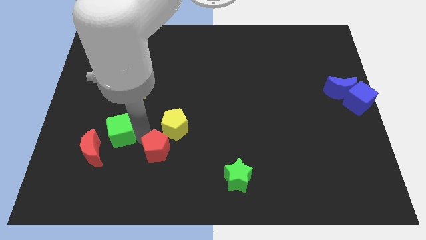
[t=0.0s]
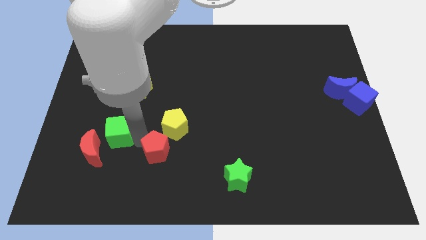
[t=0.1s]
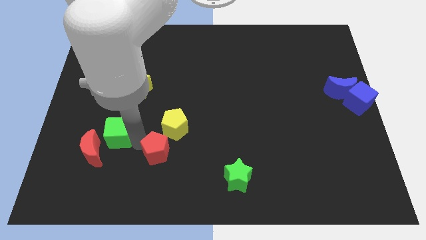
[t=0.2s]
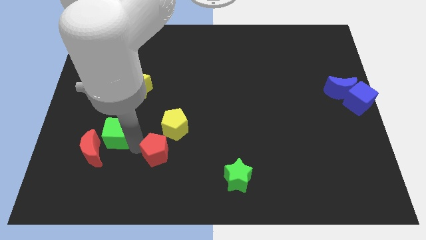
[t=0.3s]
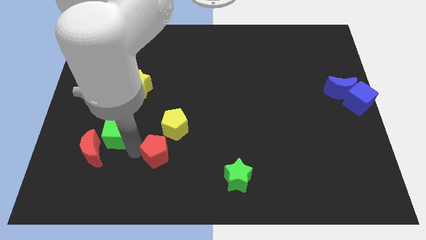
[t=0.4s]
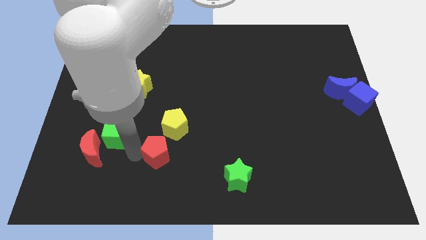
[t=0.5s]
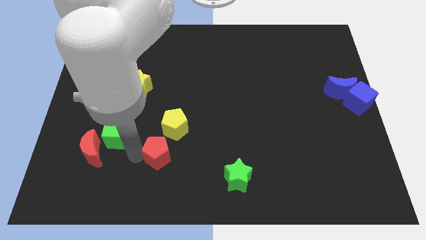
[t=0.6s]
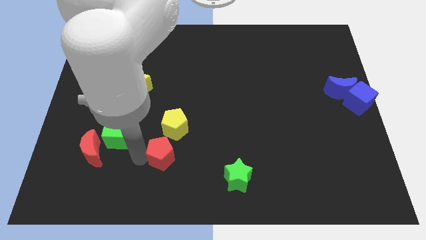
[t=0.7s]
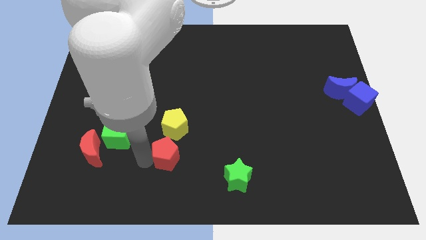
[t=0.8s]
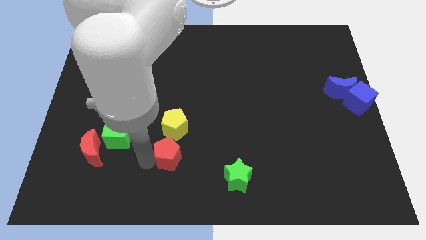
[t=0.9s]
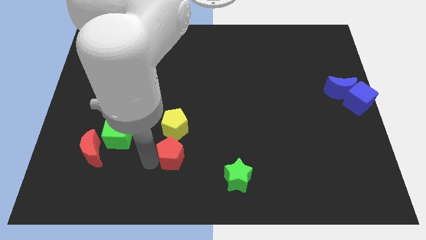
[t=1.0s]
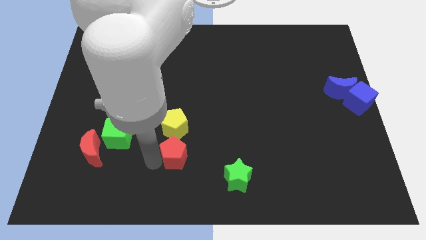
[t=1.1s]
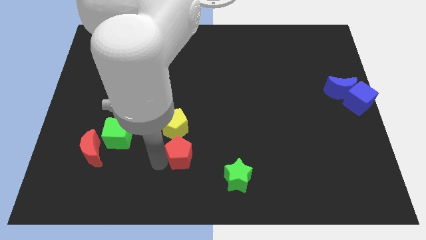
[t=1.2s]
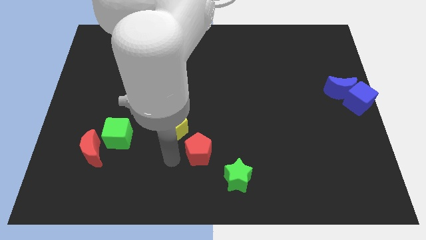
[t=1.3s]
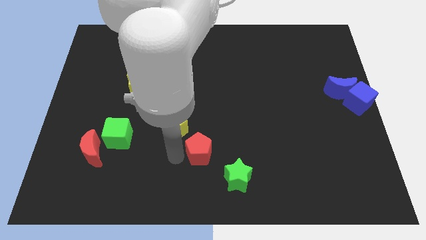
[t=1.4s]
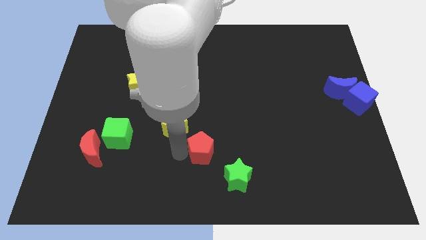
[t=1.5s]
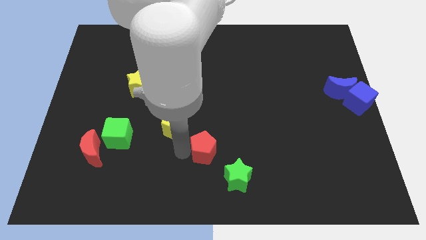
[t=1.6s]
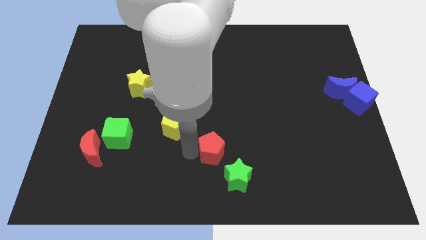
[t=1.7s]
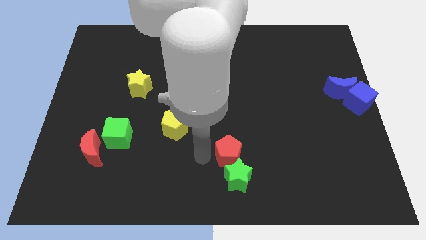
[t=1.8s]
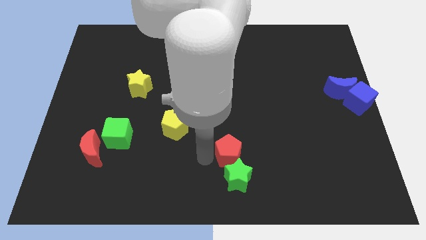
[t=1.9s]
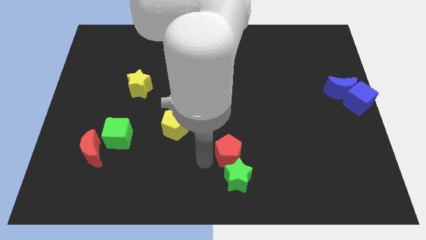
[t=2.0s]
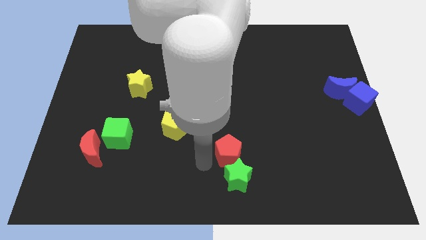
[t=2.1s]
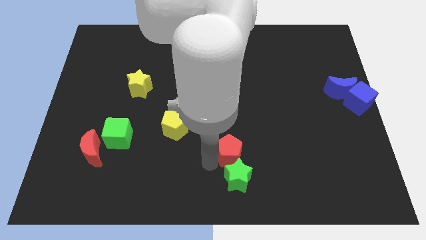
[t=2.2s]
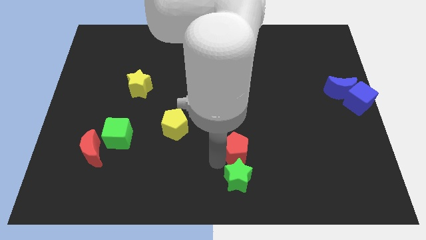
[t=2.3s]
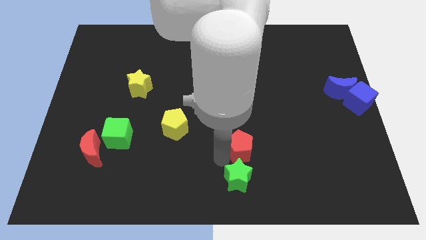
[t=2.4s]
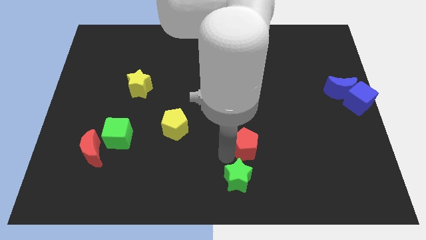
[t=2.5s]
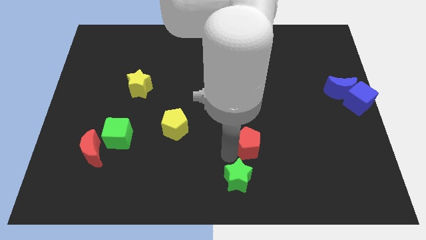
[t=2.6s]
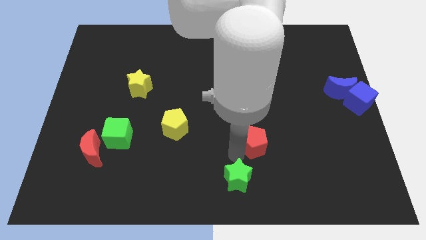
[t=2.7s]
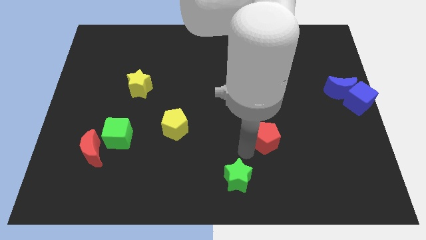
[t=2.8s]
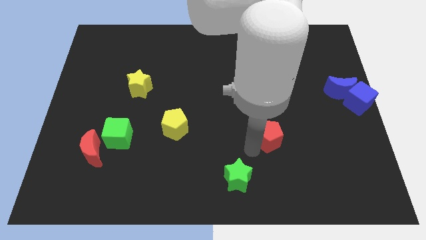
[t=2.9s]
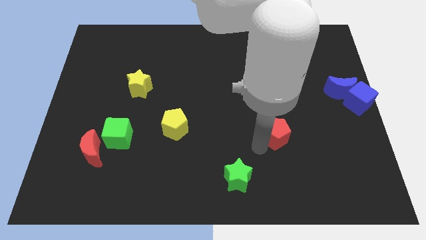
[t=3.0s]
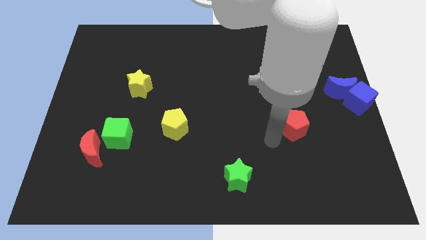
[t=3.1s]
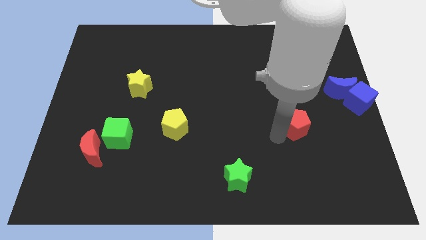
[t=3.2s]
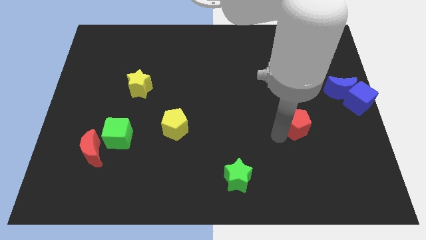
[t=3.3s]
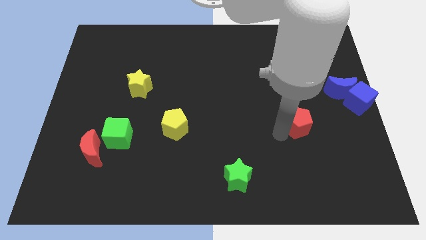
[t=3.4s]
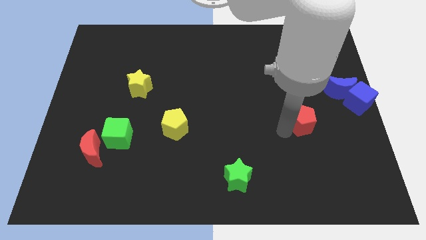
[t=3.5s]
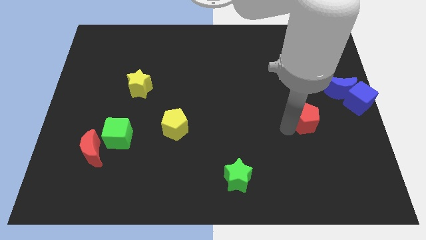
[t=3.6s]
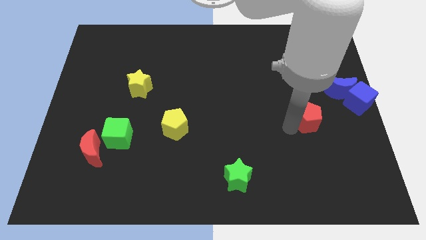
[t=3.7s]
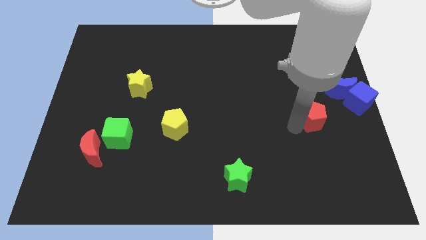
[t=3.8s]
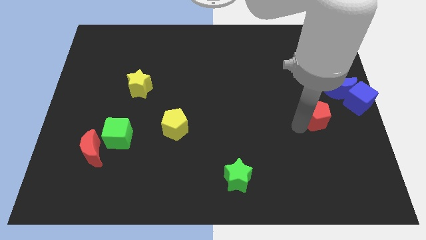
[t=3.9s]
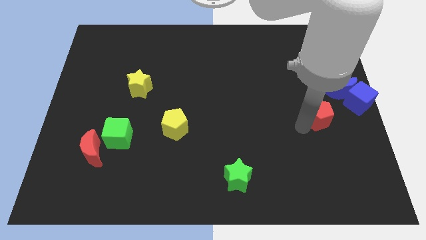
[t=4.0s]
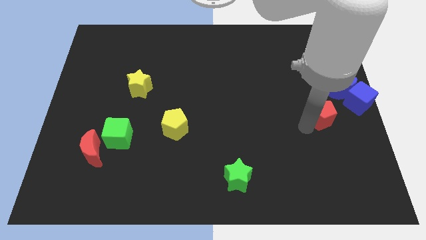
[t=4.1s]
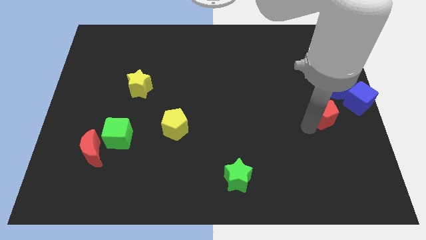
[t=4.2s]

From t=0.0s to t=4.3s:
move the red pentagon towards the right center of the board

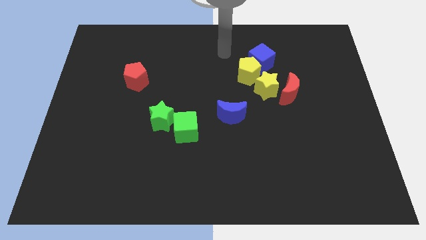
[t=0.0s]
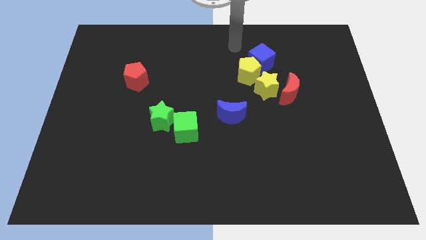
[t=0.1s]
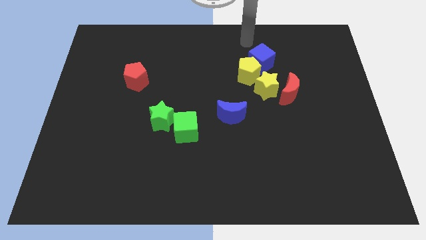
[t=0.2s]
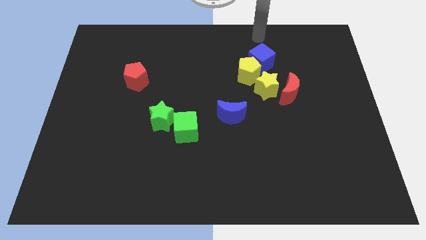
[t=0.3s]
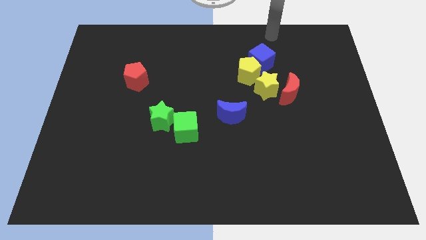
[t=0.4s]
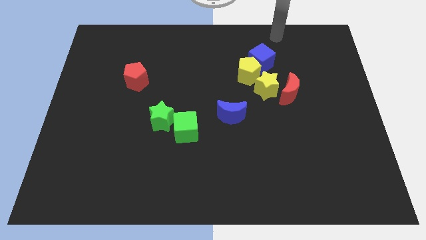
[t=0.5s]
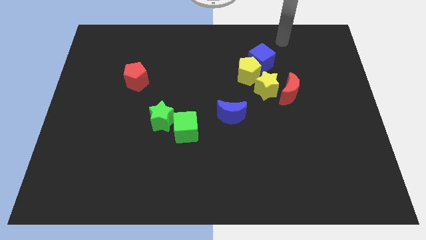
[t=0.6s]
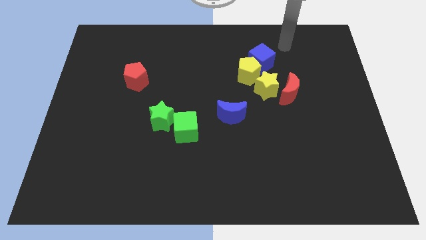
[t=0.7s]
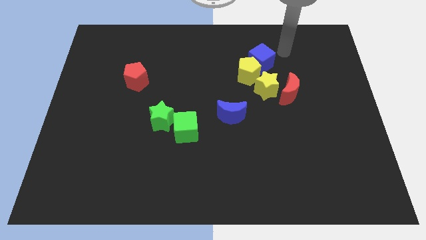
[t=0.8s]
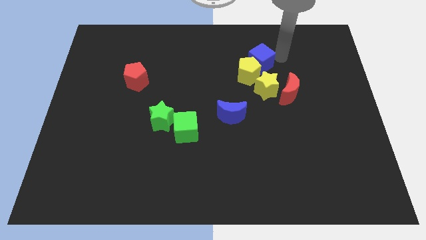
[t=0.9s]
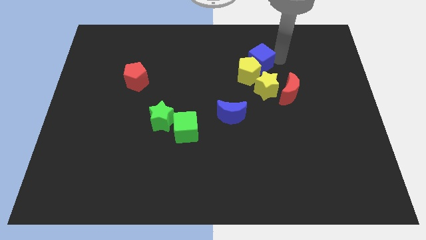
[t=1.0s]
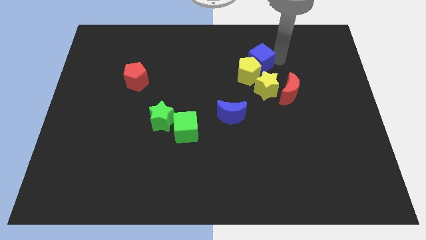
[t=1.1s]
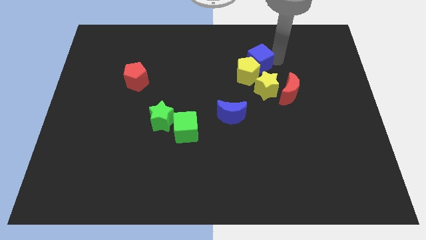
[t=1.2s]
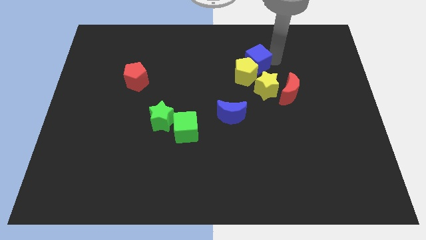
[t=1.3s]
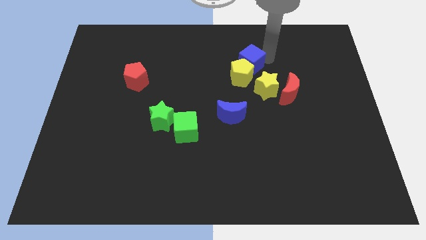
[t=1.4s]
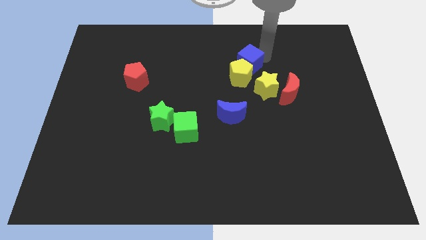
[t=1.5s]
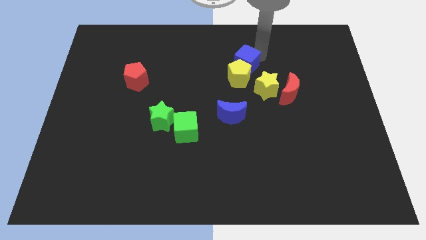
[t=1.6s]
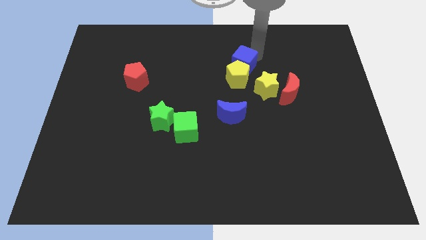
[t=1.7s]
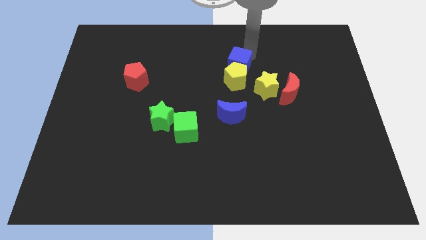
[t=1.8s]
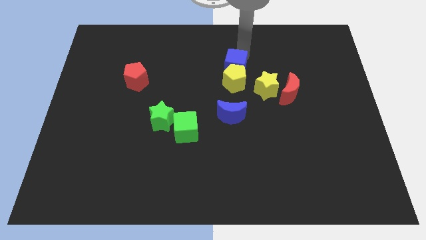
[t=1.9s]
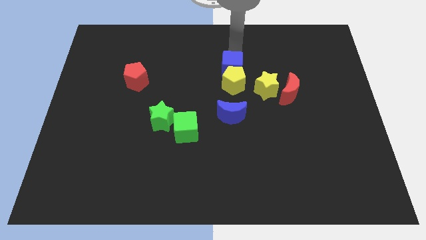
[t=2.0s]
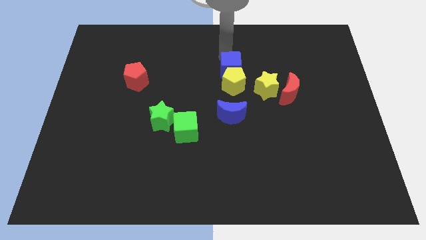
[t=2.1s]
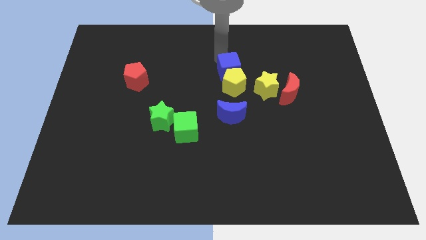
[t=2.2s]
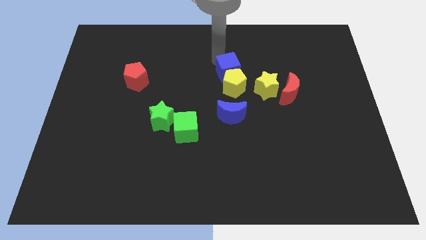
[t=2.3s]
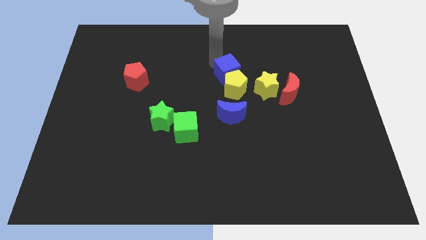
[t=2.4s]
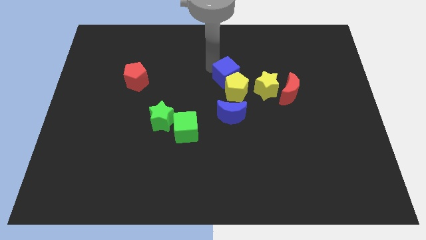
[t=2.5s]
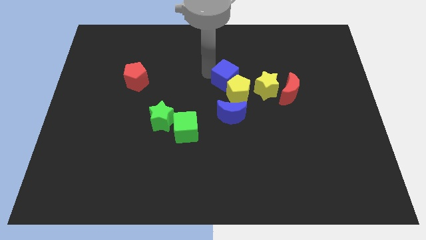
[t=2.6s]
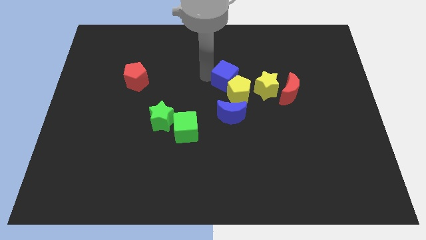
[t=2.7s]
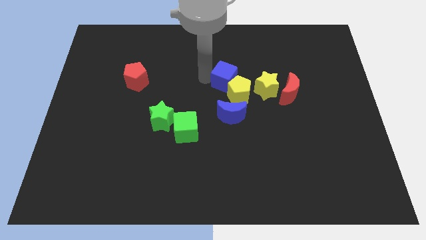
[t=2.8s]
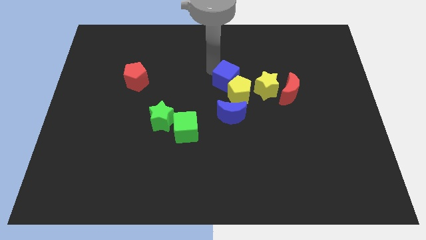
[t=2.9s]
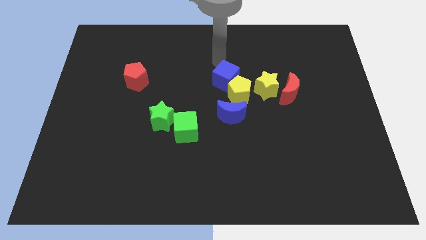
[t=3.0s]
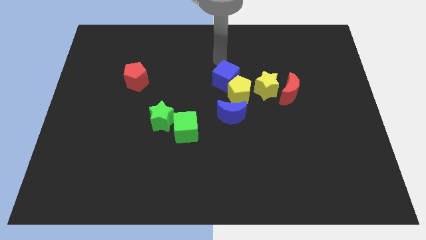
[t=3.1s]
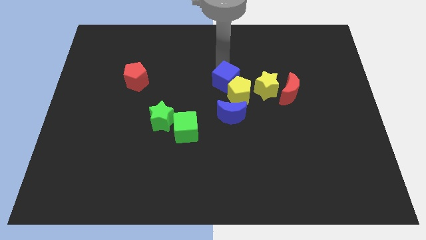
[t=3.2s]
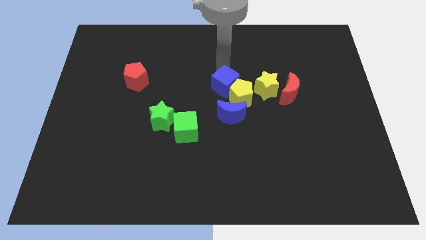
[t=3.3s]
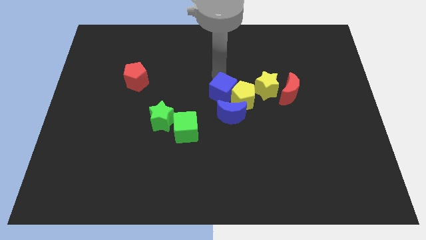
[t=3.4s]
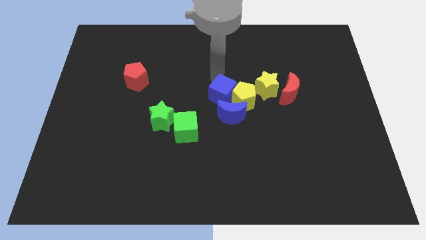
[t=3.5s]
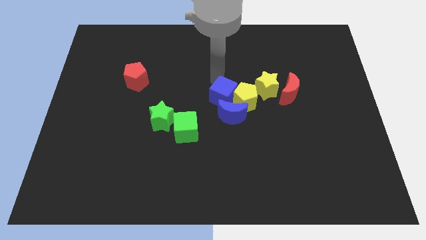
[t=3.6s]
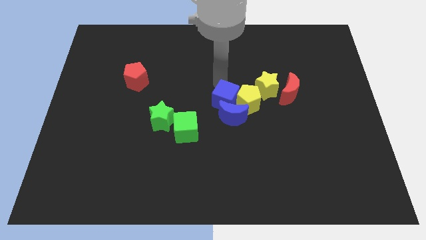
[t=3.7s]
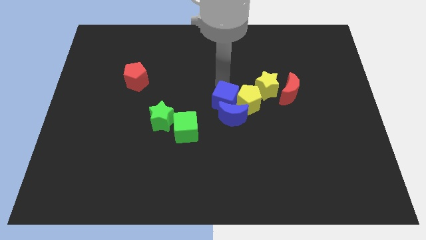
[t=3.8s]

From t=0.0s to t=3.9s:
push the blue cube and yellow pentagon into the blue crescent

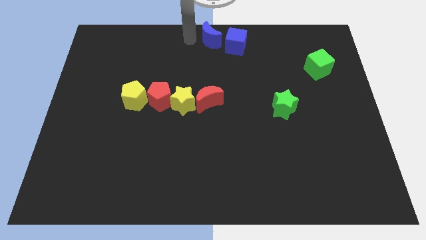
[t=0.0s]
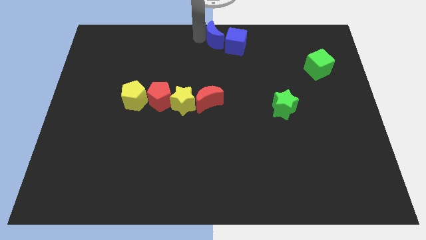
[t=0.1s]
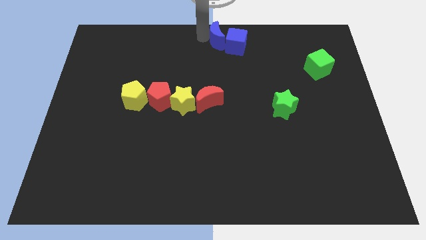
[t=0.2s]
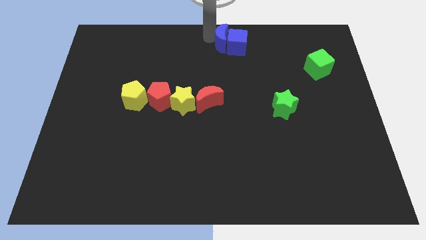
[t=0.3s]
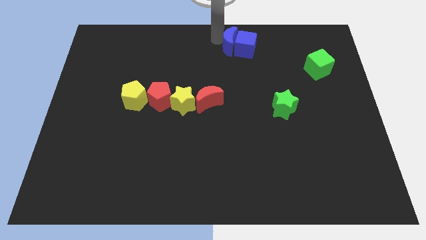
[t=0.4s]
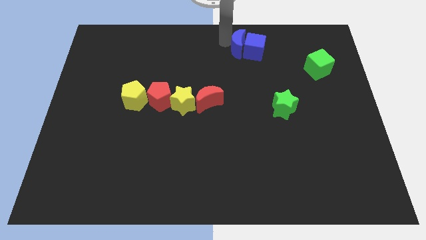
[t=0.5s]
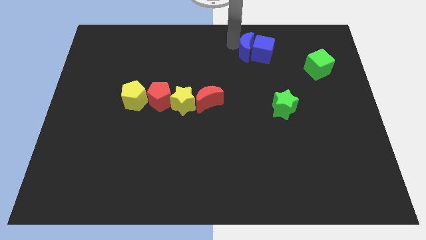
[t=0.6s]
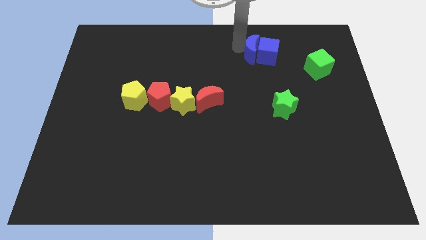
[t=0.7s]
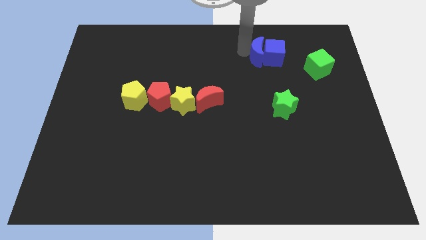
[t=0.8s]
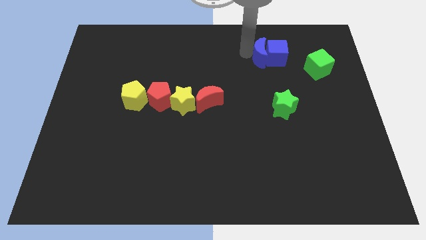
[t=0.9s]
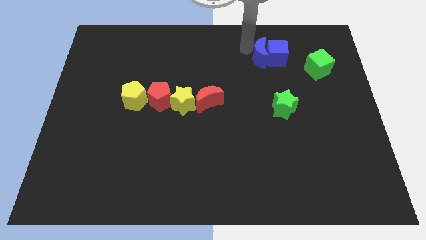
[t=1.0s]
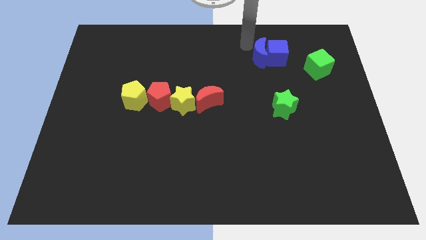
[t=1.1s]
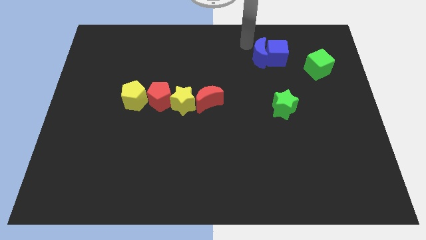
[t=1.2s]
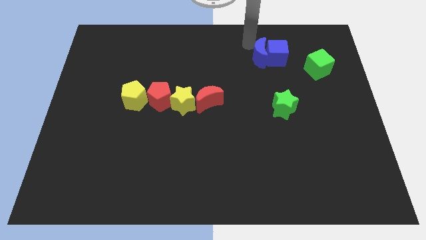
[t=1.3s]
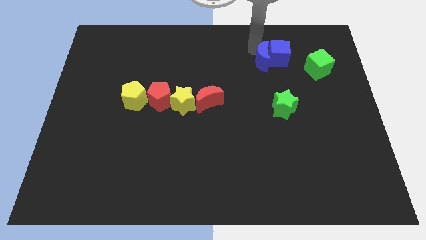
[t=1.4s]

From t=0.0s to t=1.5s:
push the blue crescent into the blue cube
